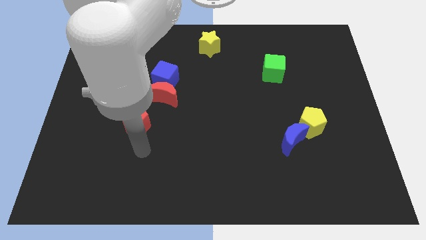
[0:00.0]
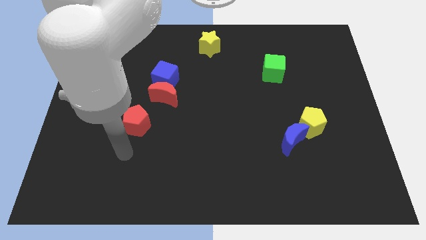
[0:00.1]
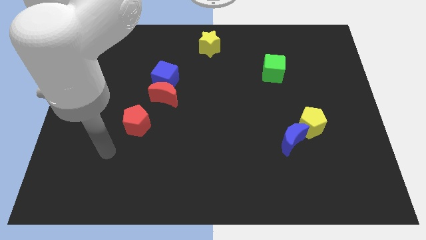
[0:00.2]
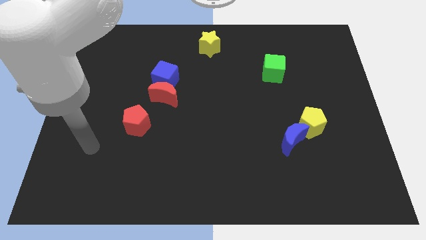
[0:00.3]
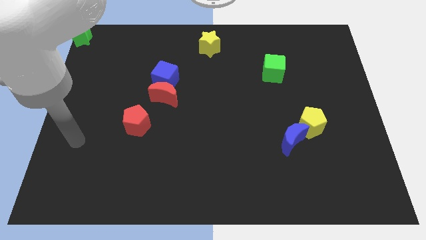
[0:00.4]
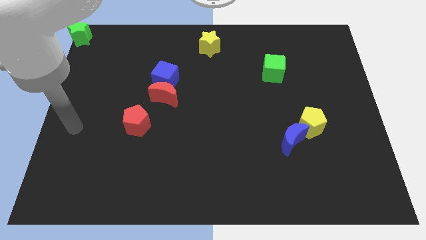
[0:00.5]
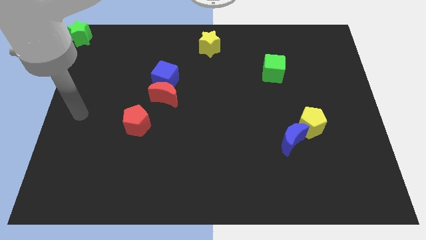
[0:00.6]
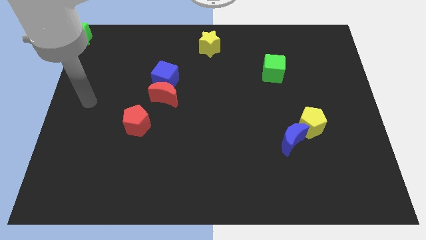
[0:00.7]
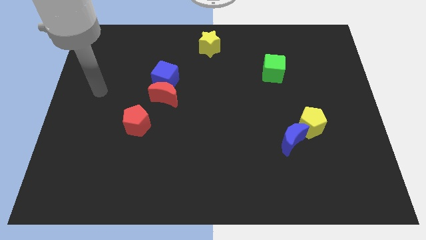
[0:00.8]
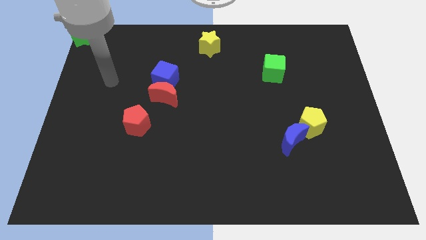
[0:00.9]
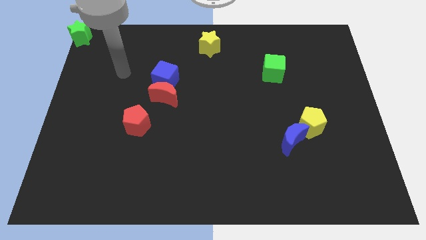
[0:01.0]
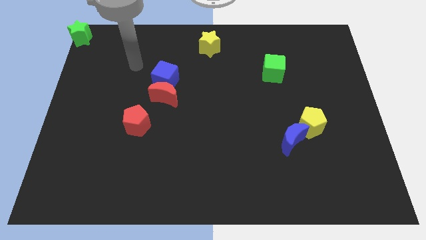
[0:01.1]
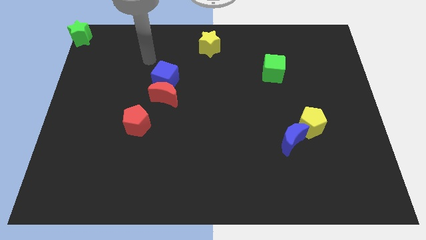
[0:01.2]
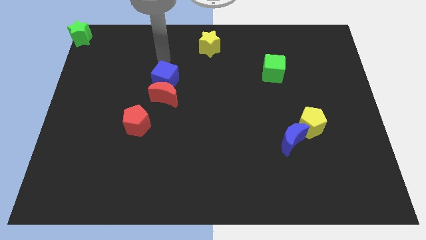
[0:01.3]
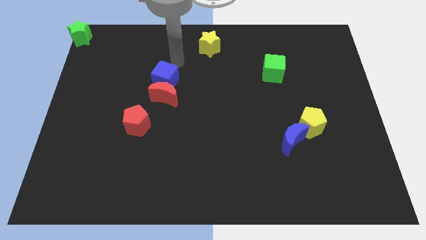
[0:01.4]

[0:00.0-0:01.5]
move arm towards the blue cube on the top left of the board

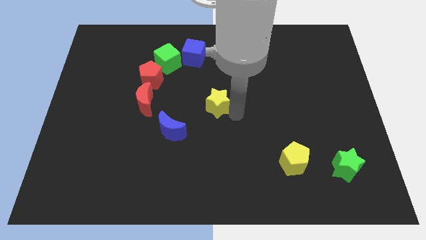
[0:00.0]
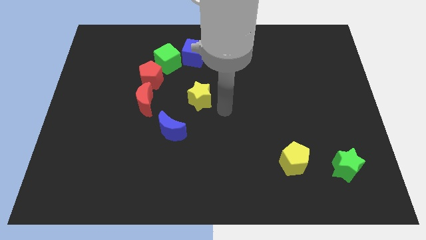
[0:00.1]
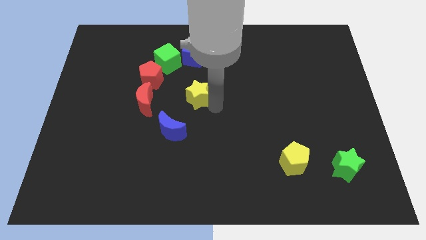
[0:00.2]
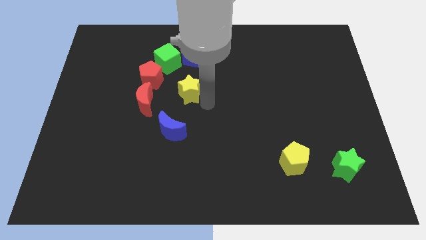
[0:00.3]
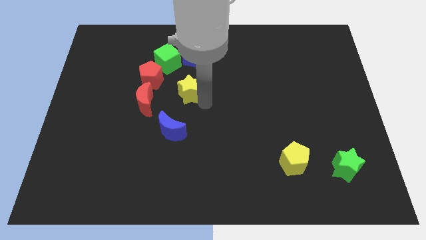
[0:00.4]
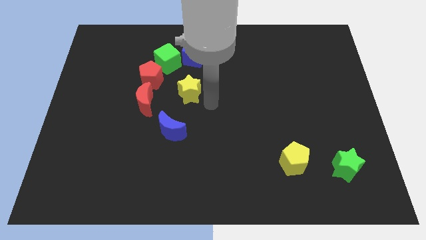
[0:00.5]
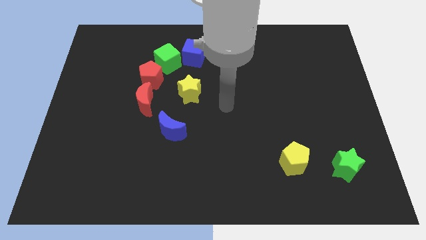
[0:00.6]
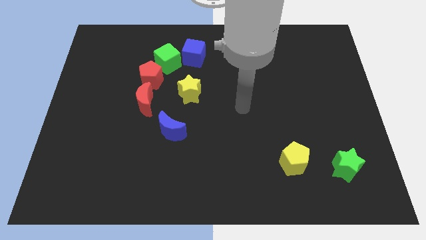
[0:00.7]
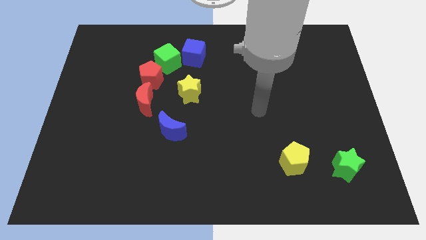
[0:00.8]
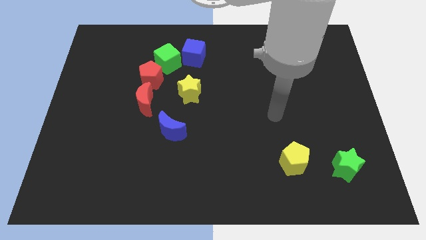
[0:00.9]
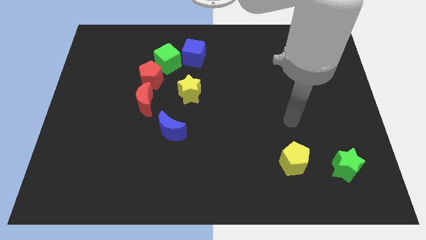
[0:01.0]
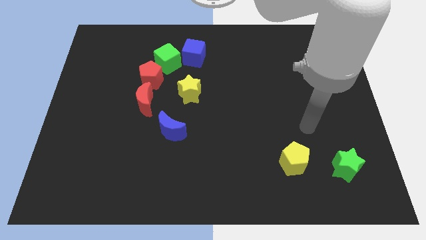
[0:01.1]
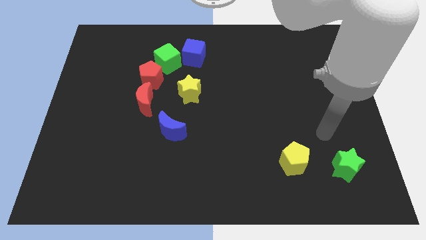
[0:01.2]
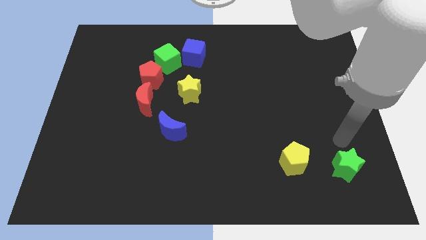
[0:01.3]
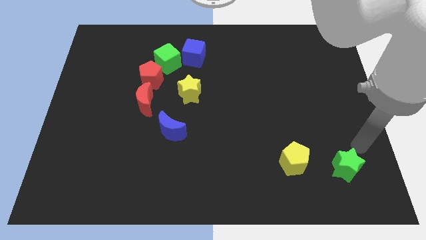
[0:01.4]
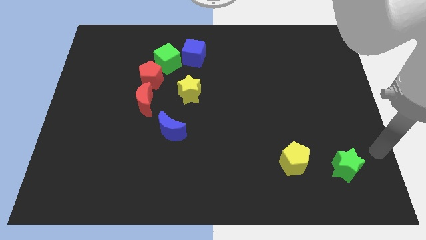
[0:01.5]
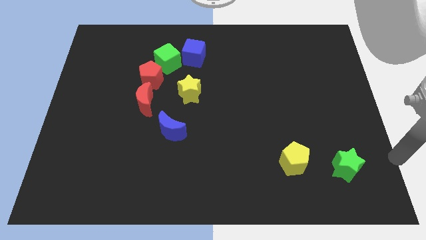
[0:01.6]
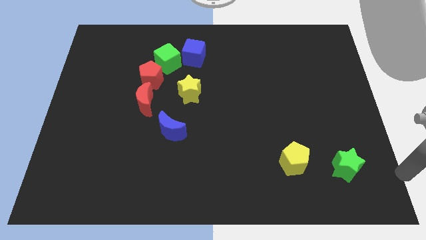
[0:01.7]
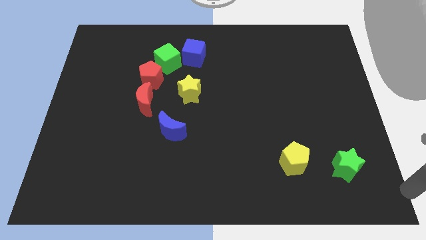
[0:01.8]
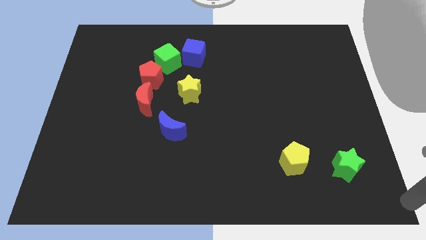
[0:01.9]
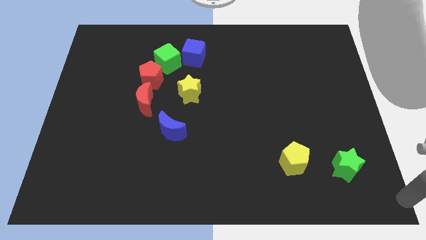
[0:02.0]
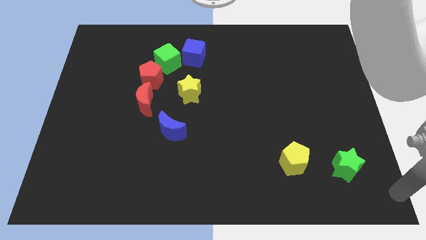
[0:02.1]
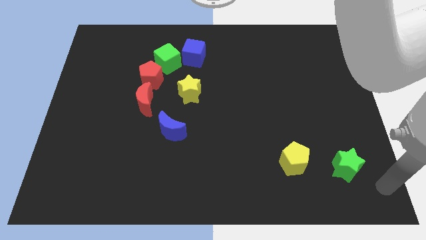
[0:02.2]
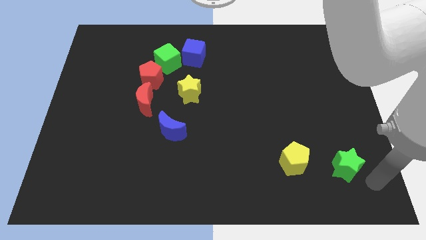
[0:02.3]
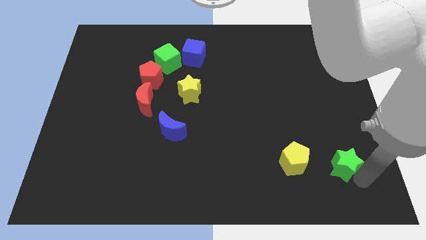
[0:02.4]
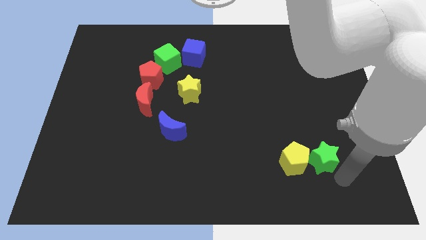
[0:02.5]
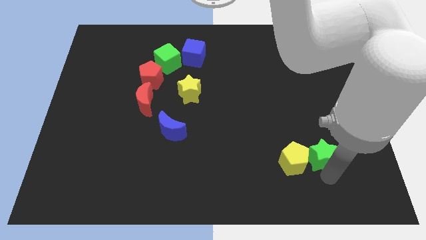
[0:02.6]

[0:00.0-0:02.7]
push green star towards yellow pentagon

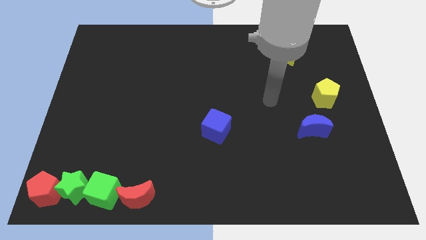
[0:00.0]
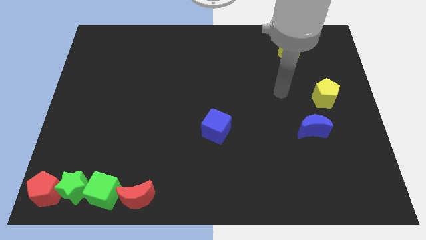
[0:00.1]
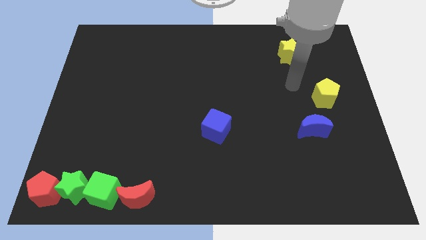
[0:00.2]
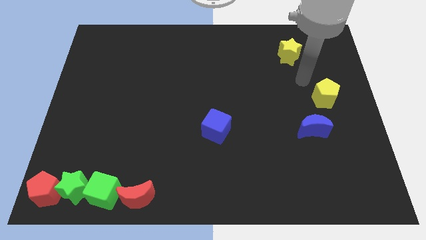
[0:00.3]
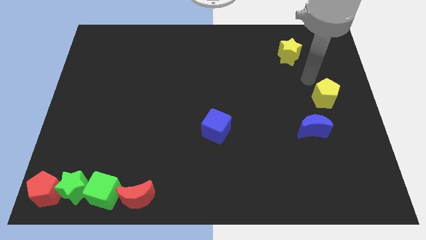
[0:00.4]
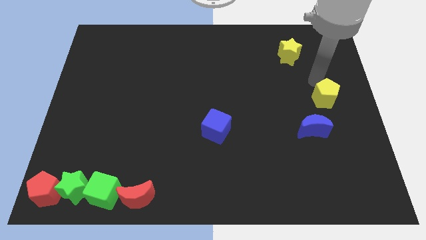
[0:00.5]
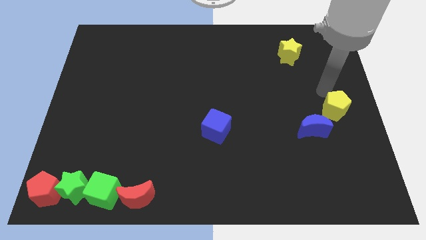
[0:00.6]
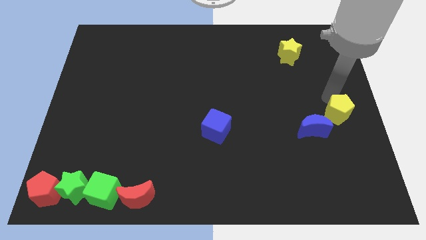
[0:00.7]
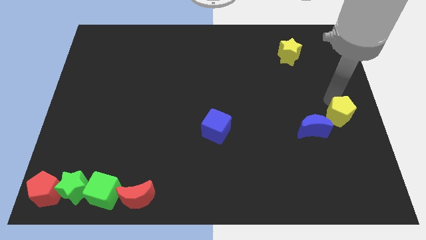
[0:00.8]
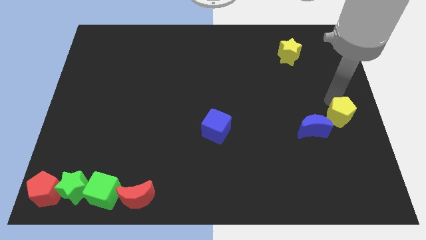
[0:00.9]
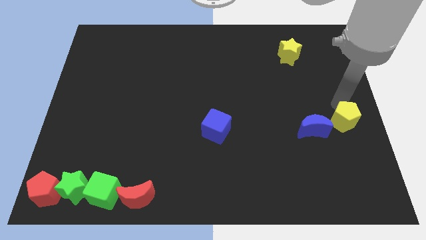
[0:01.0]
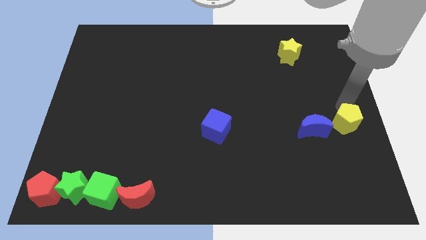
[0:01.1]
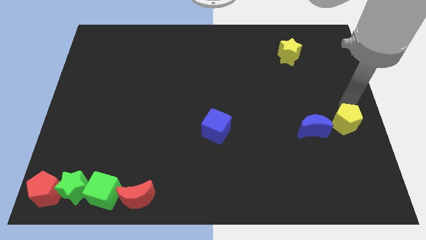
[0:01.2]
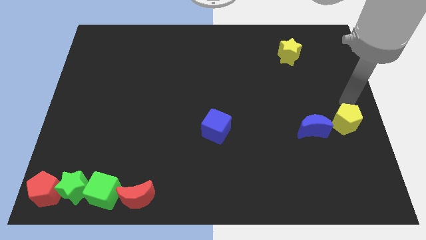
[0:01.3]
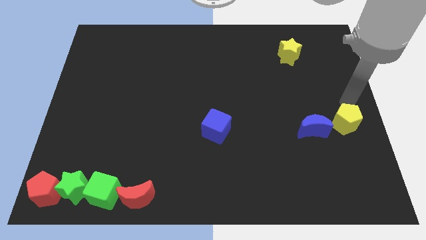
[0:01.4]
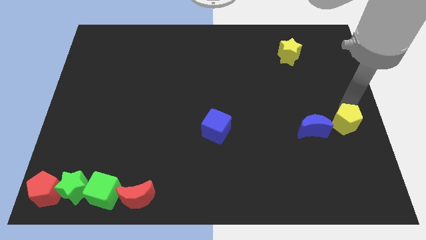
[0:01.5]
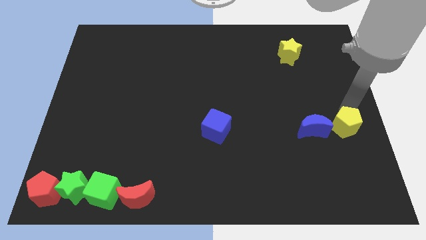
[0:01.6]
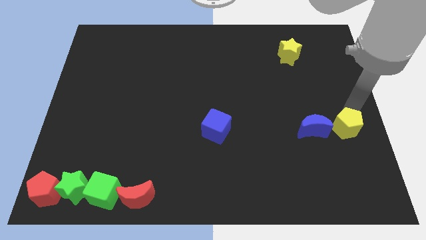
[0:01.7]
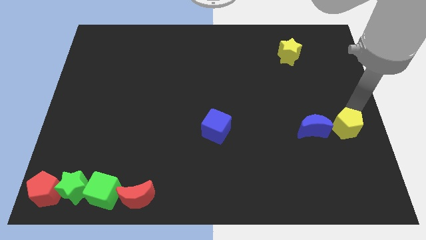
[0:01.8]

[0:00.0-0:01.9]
place yellow pentagon right to blue moon

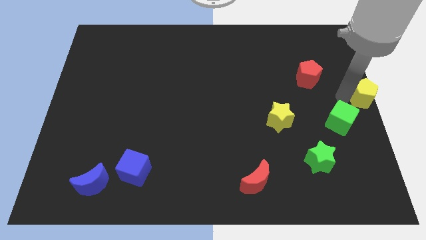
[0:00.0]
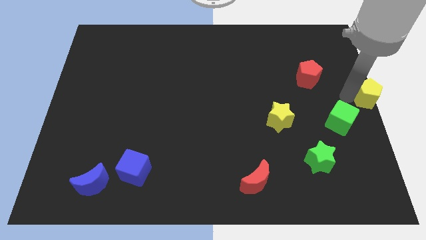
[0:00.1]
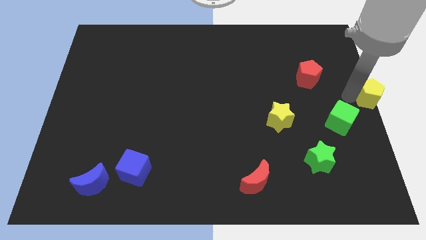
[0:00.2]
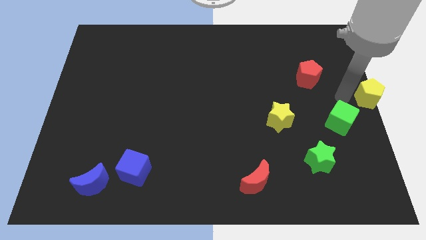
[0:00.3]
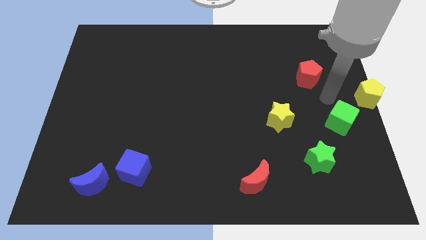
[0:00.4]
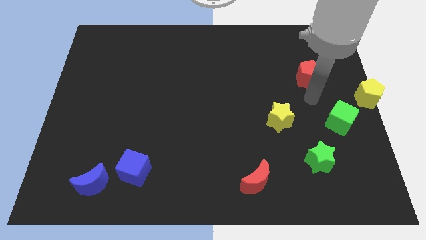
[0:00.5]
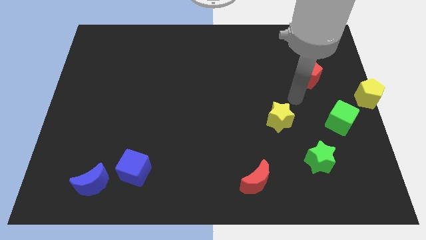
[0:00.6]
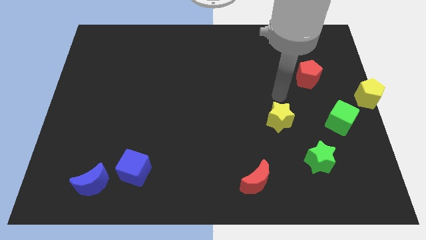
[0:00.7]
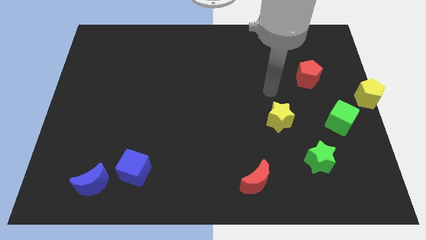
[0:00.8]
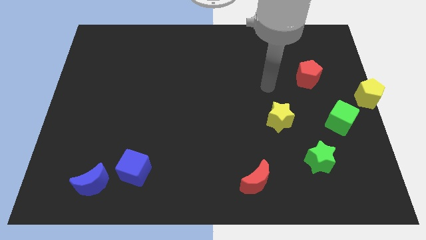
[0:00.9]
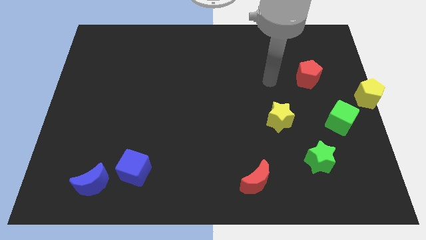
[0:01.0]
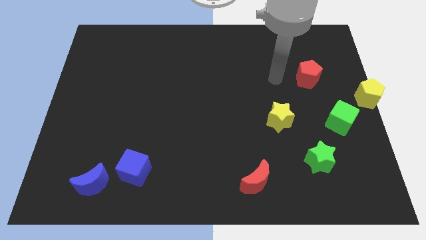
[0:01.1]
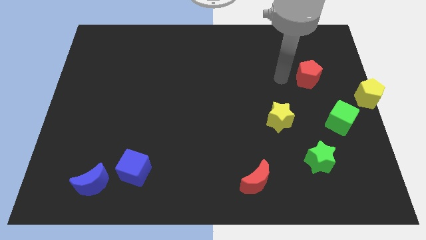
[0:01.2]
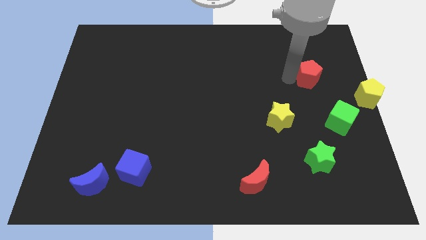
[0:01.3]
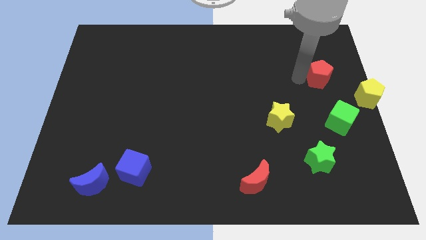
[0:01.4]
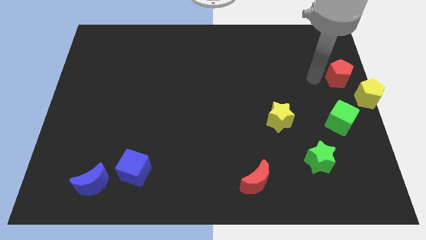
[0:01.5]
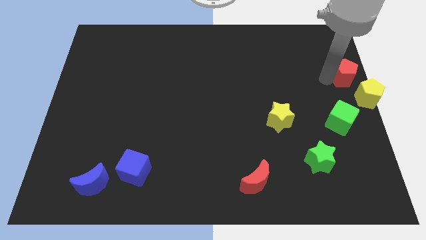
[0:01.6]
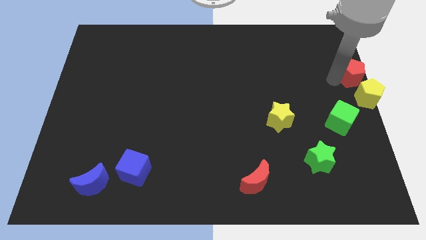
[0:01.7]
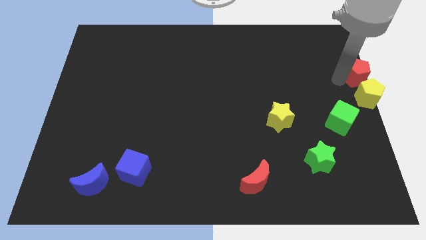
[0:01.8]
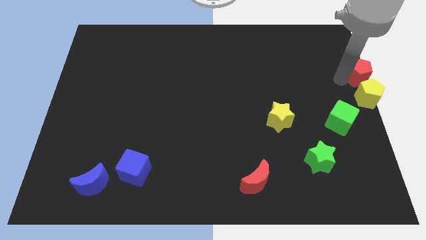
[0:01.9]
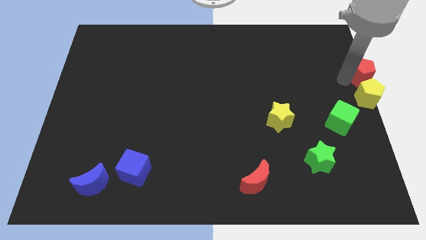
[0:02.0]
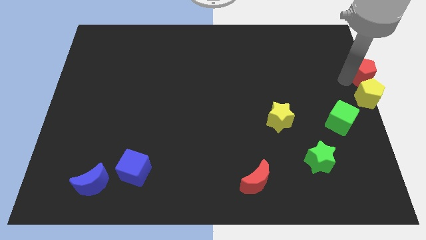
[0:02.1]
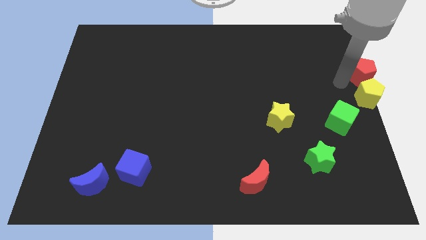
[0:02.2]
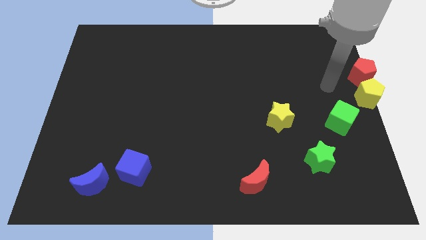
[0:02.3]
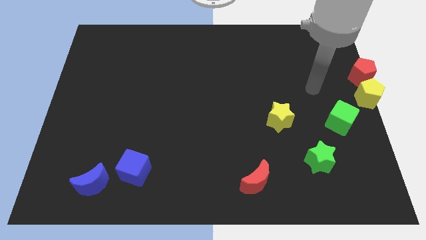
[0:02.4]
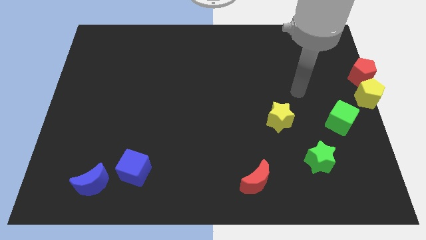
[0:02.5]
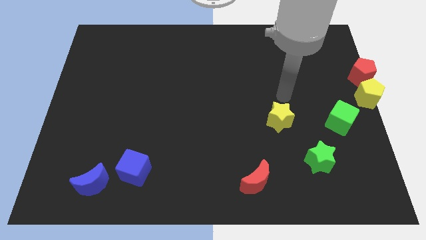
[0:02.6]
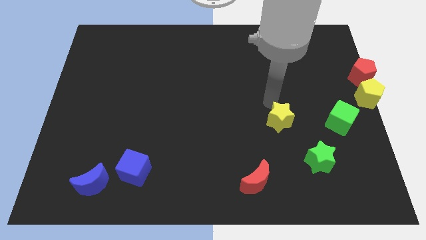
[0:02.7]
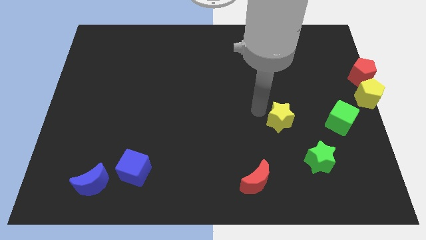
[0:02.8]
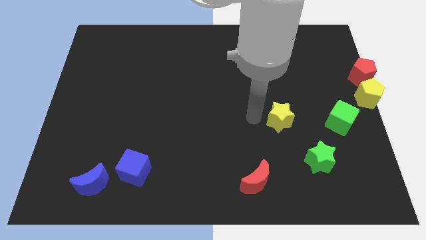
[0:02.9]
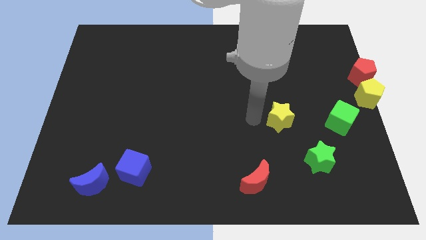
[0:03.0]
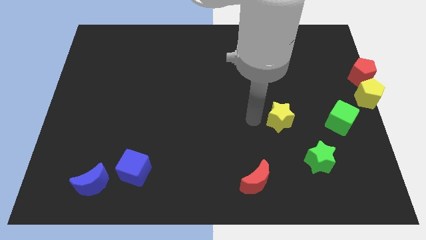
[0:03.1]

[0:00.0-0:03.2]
push red pentagon to the top of the yellow pentagon
